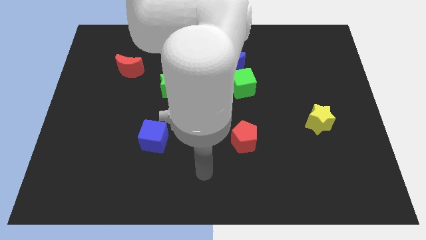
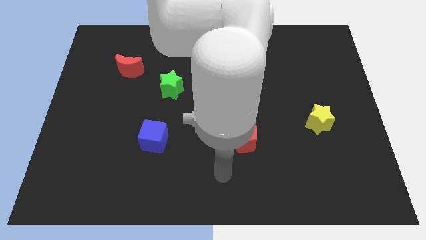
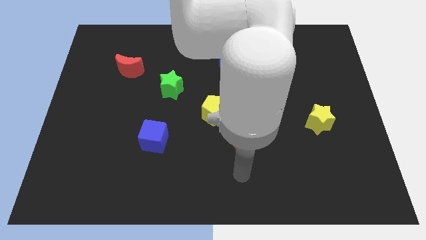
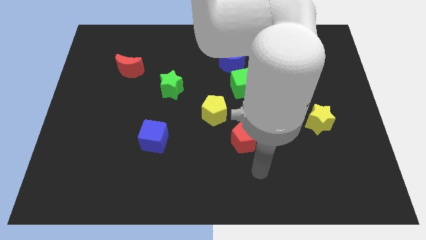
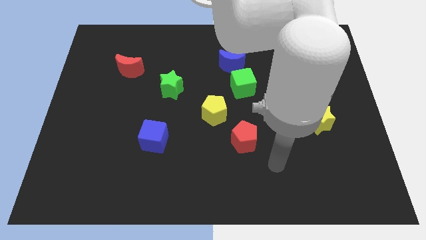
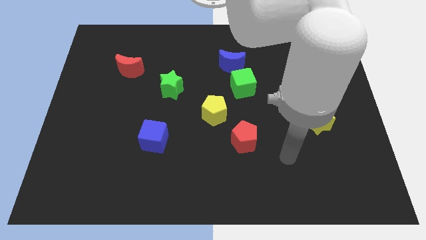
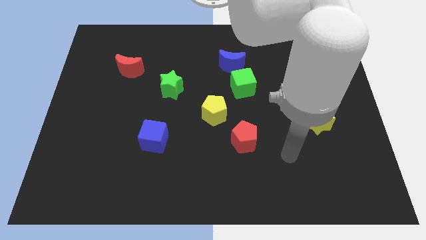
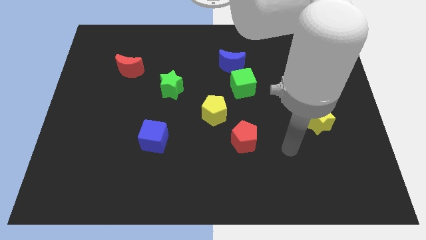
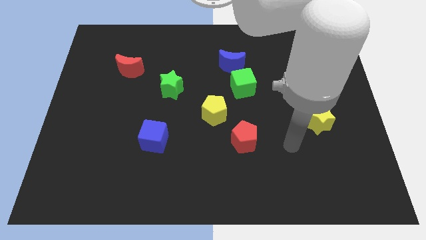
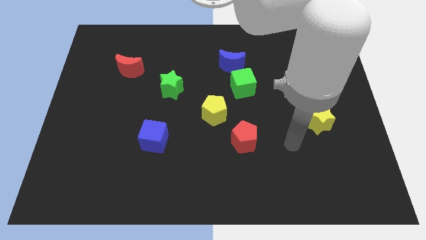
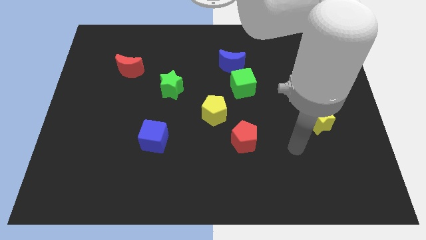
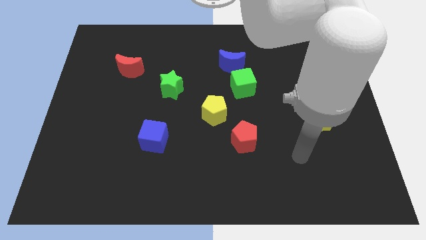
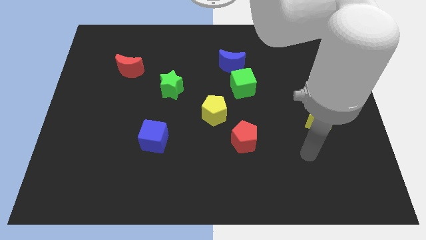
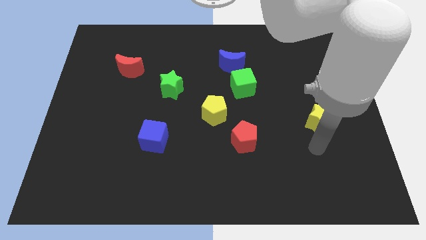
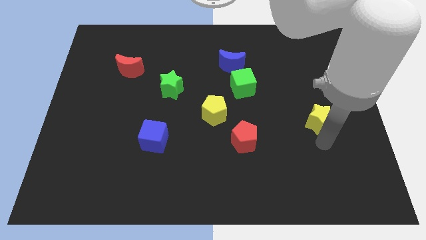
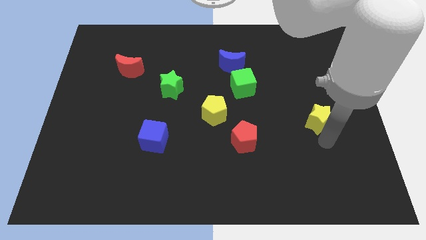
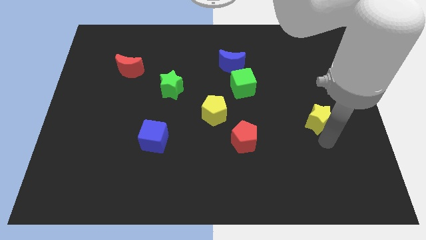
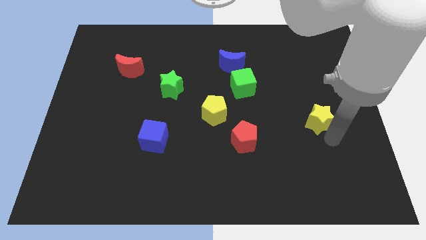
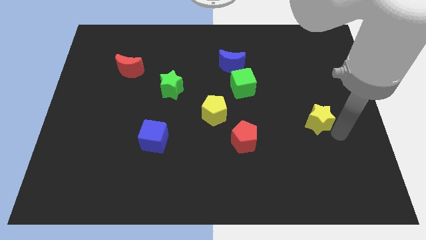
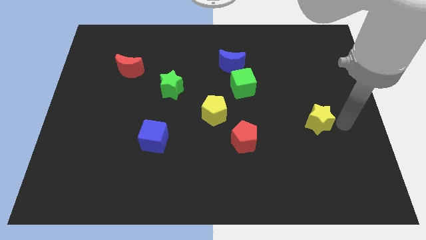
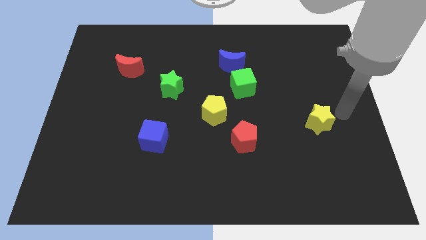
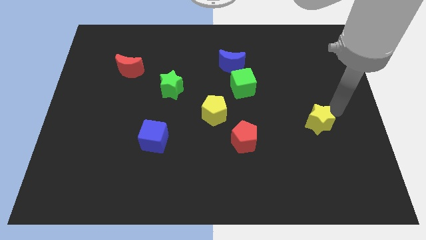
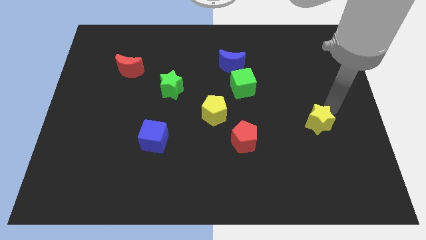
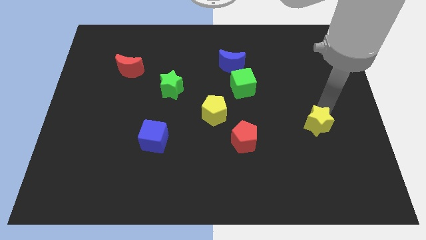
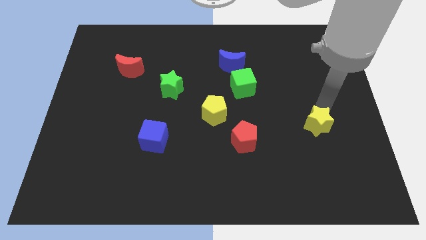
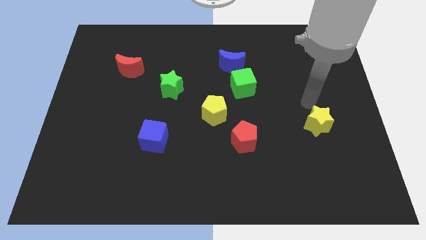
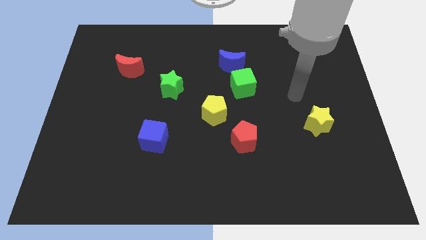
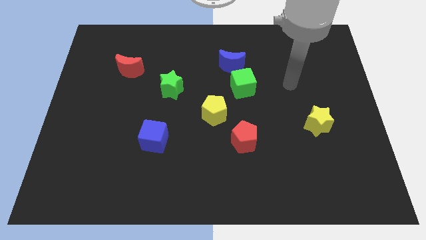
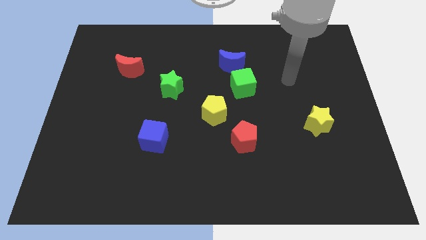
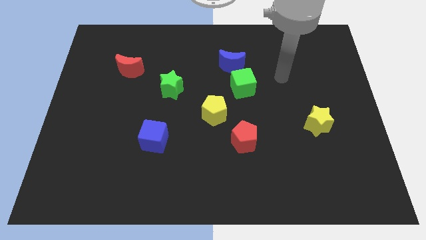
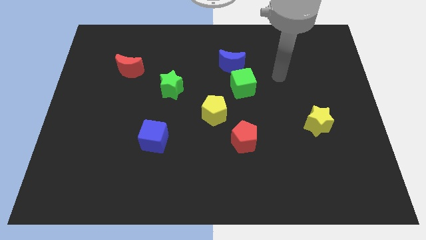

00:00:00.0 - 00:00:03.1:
slightly touch right to the yellow star

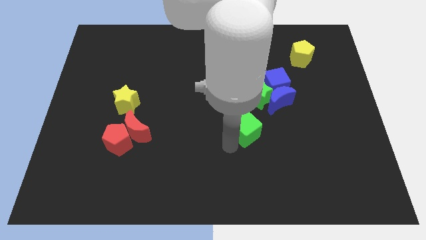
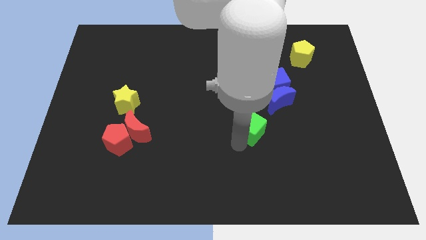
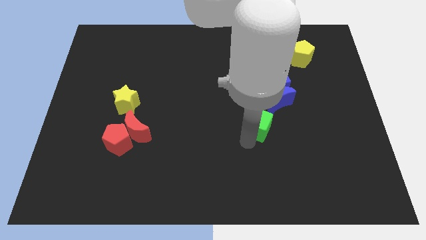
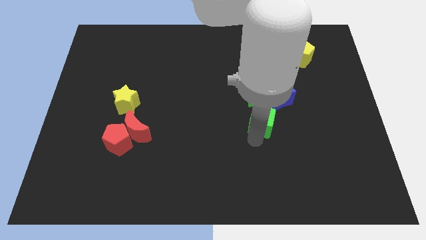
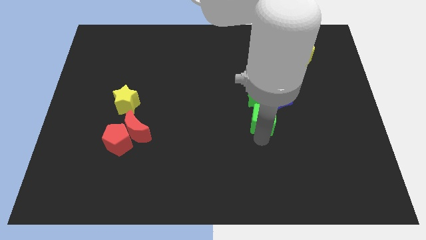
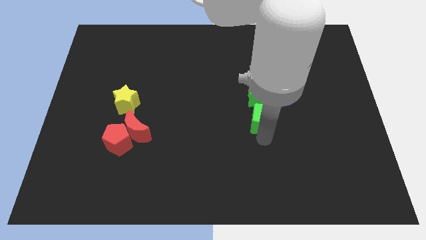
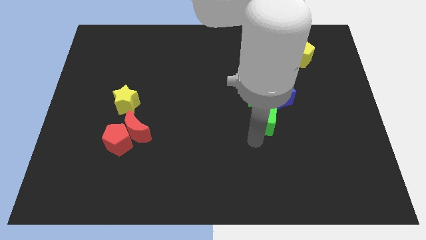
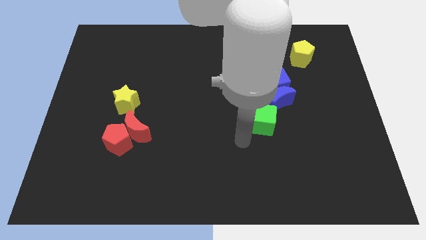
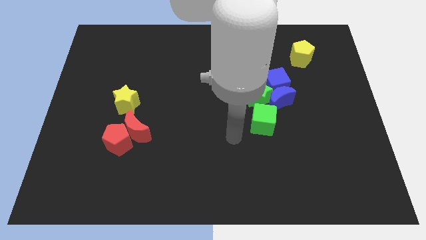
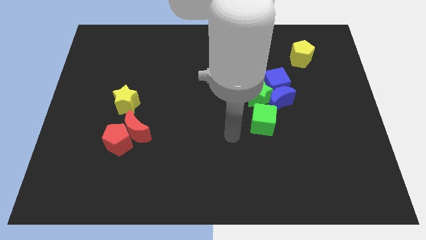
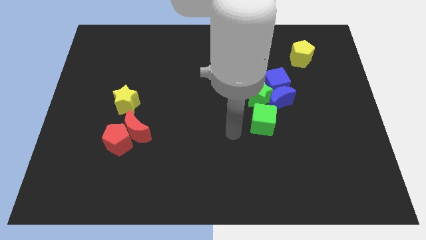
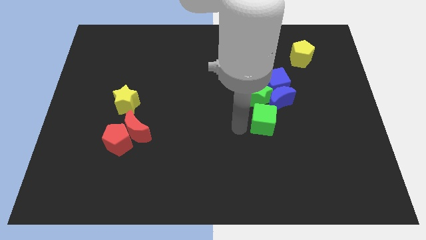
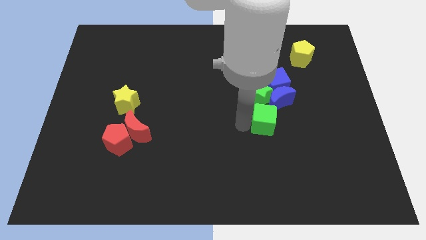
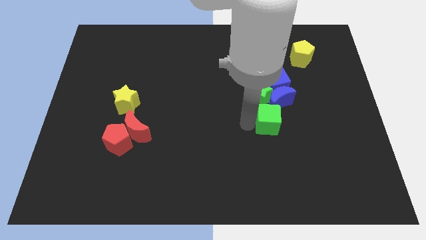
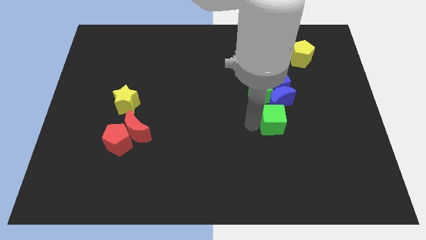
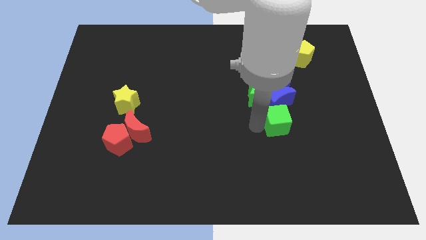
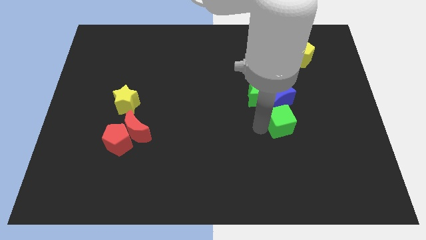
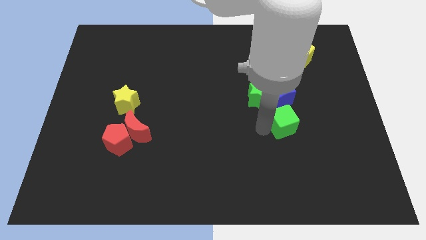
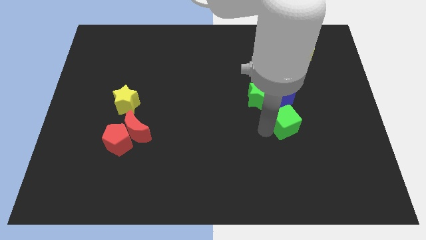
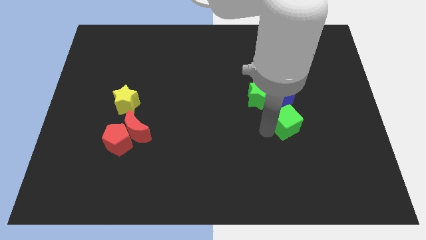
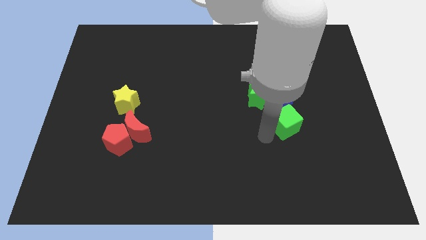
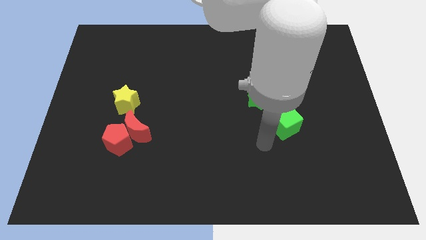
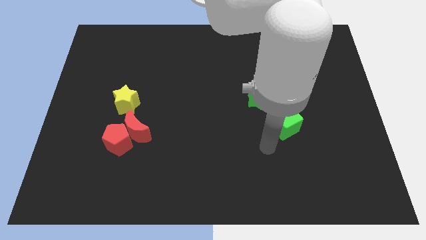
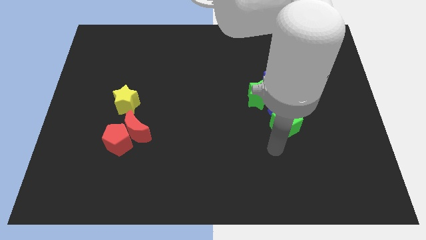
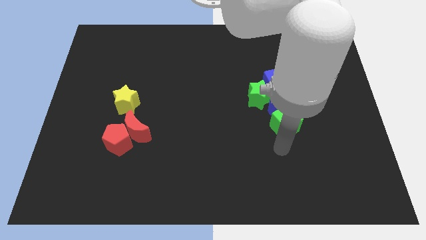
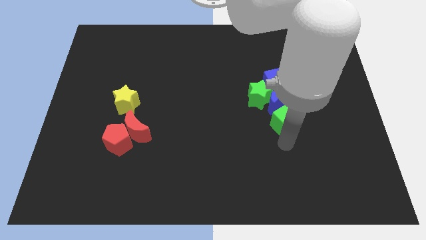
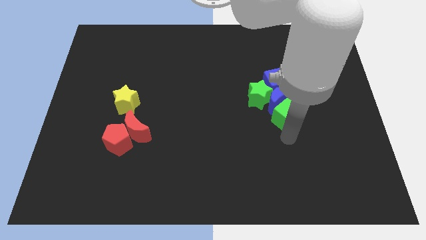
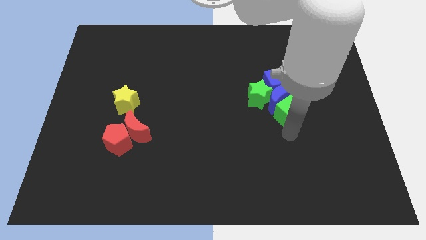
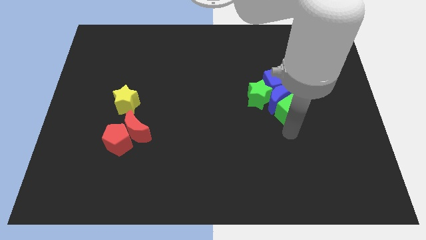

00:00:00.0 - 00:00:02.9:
move the green cube to the bottom of the blue crescent

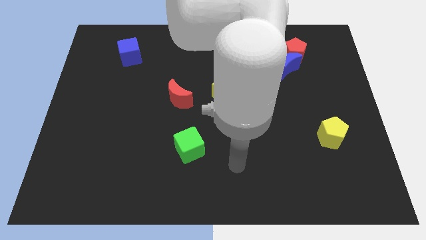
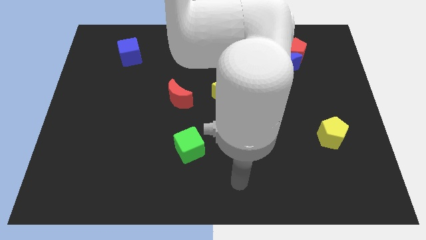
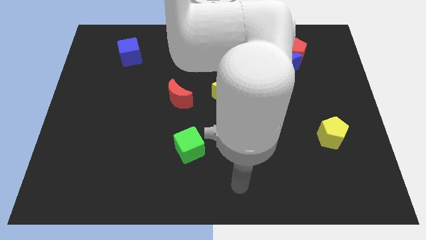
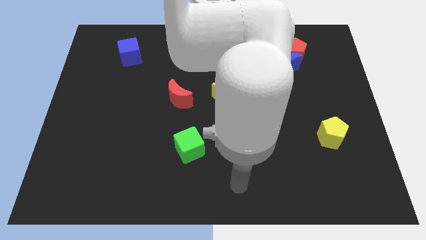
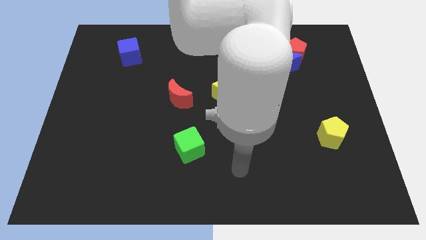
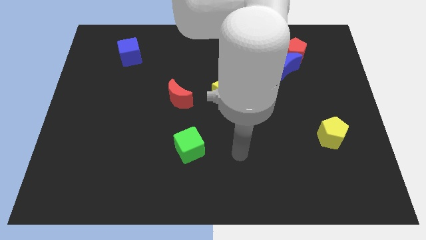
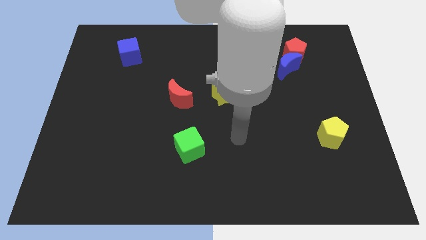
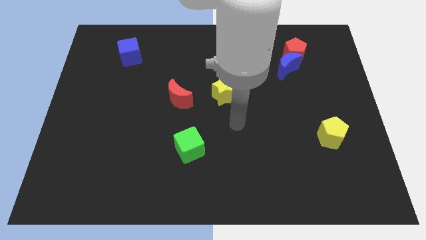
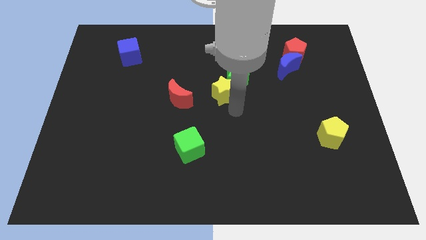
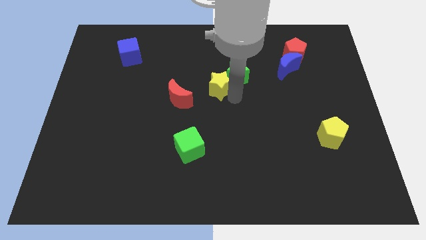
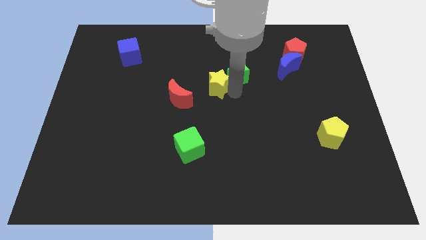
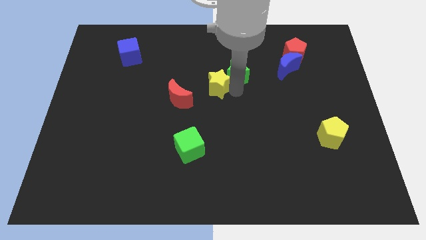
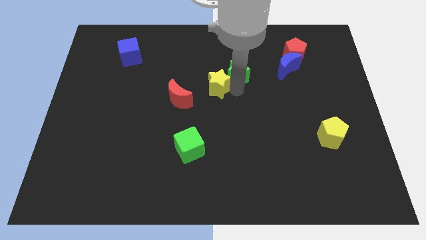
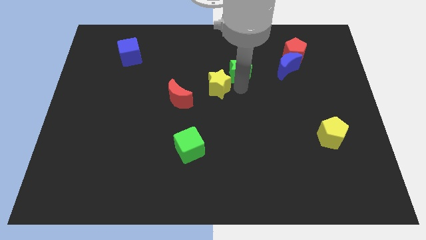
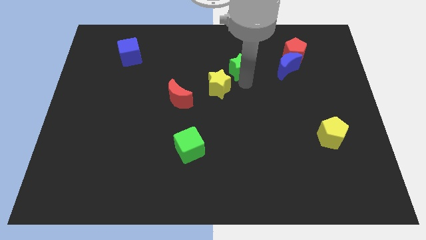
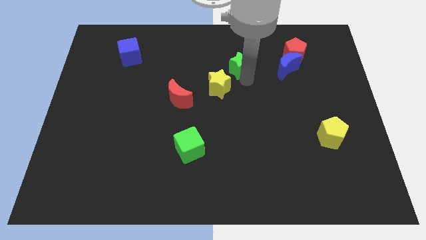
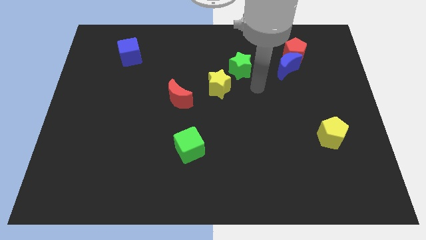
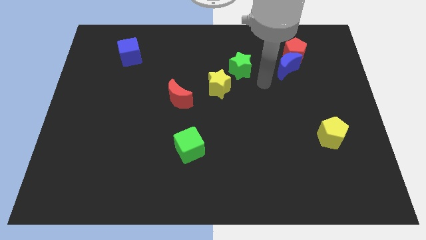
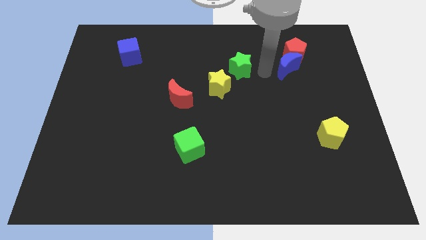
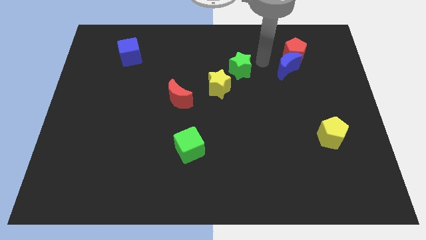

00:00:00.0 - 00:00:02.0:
move your arm near the green star

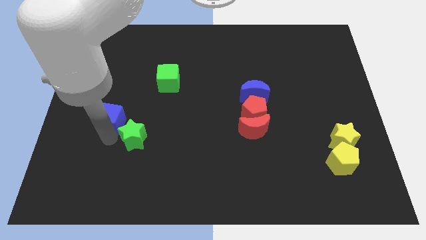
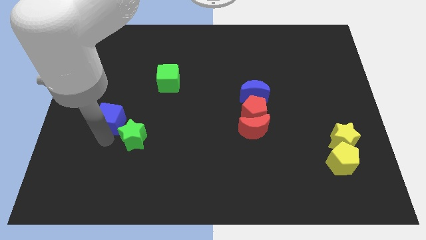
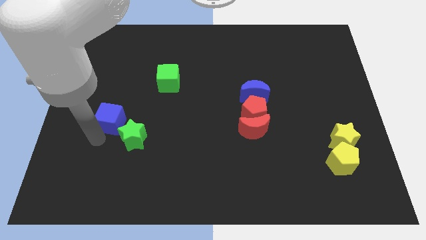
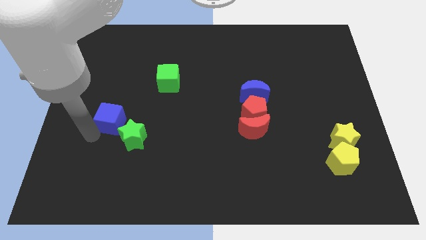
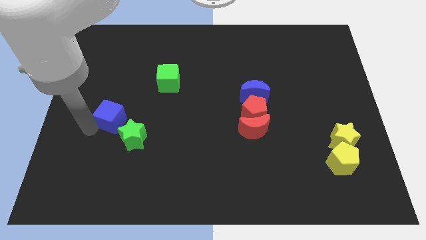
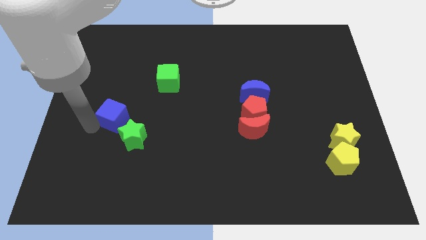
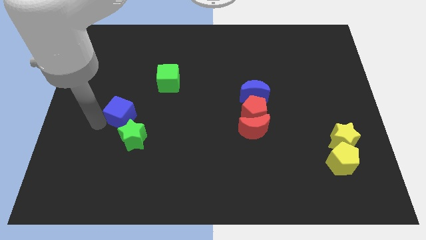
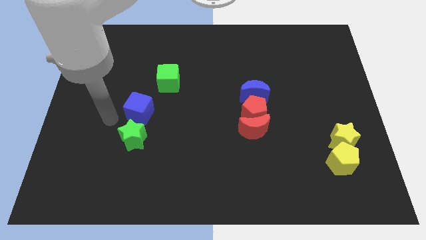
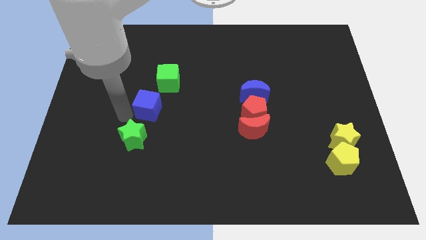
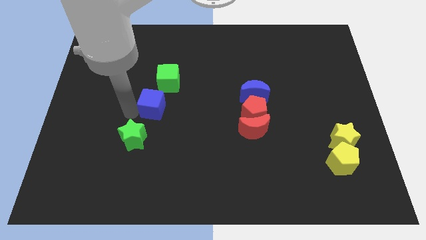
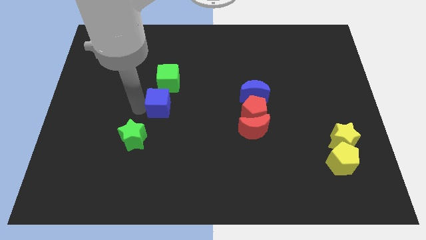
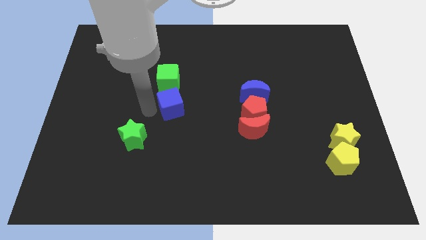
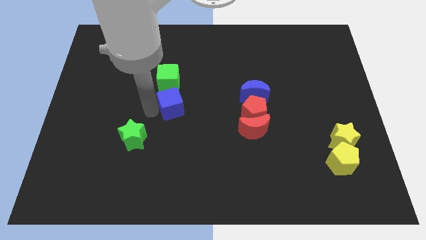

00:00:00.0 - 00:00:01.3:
place blue cube below green cube
